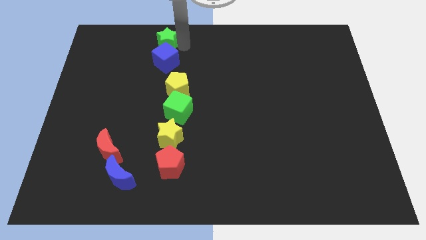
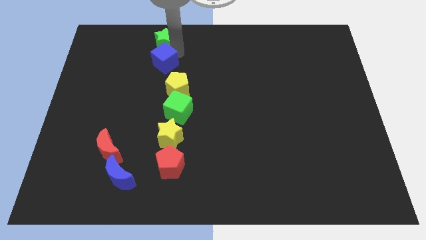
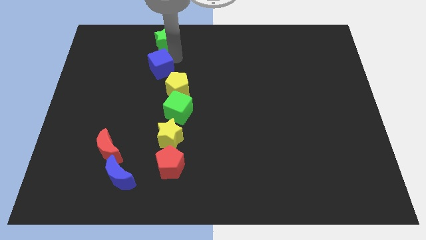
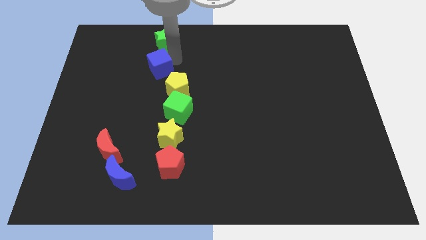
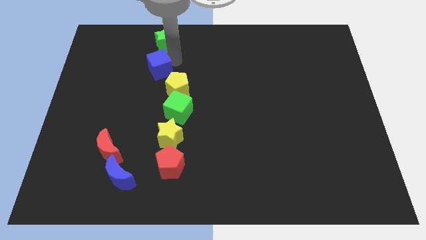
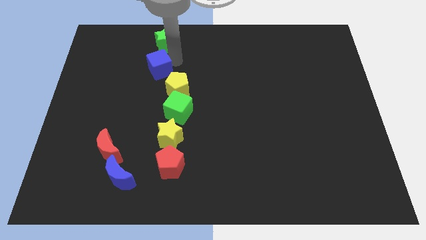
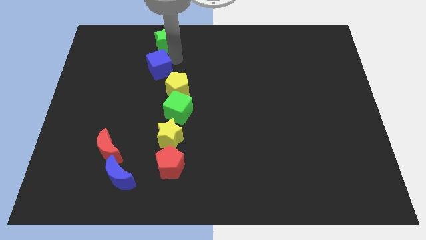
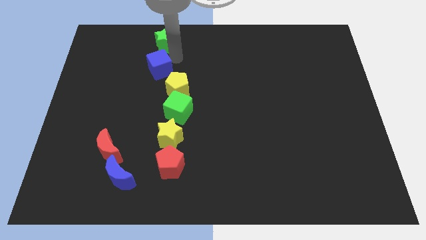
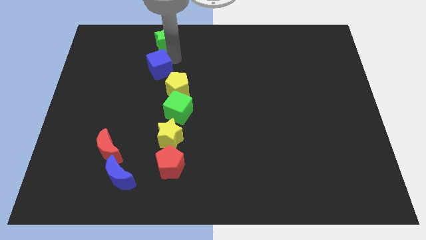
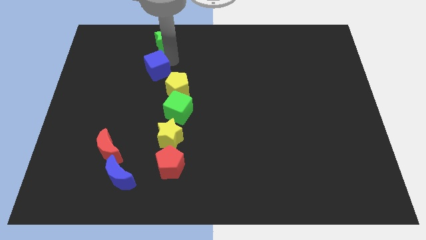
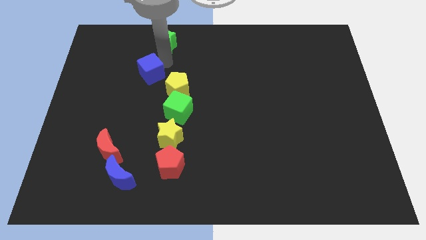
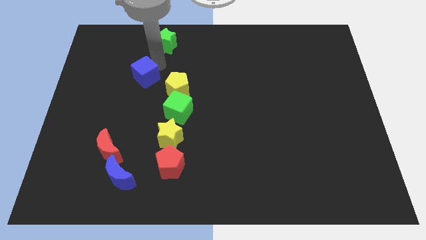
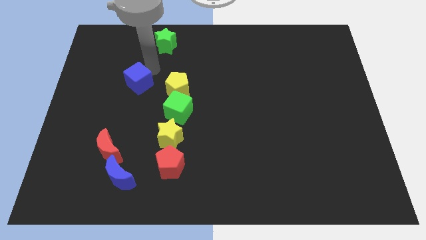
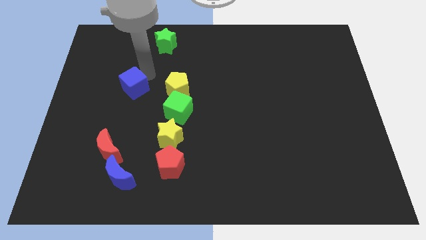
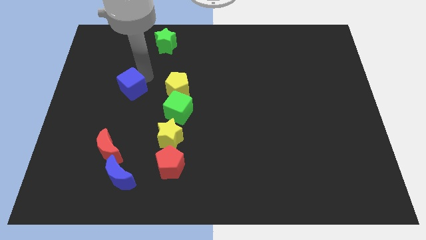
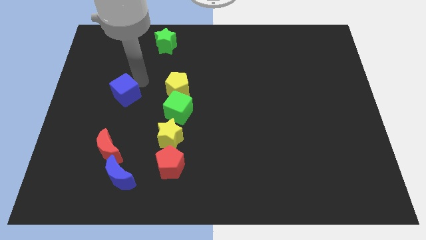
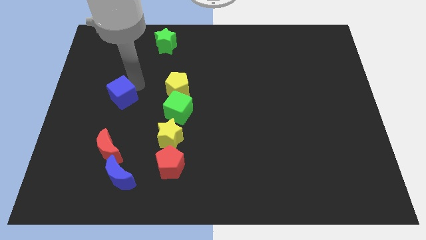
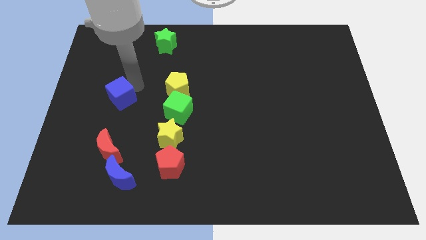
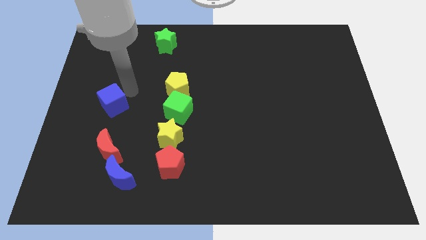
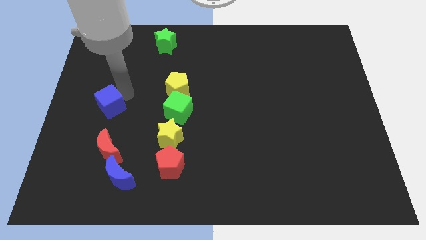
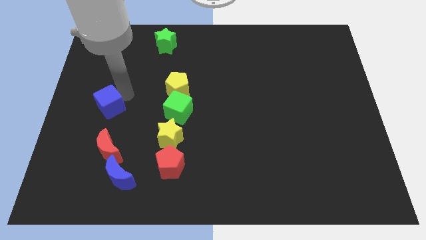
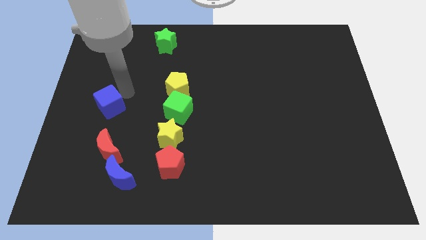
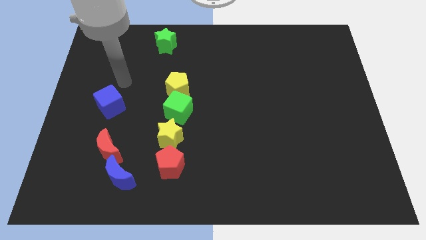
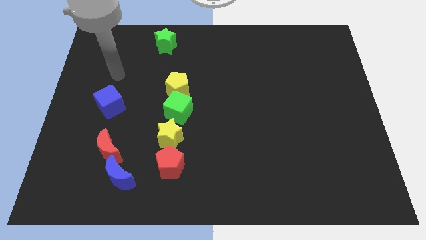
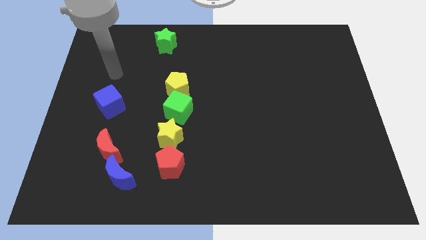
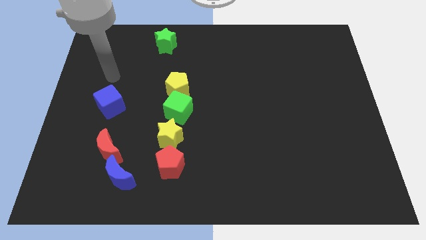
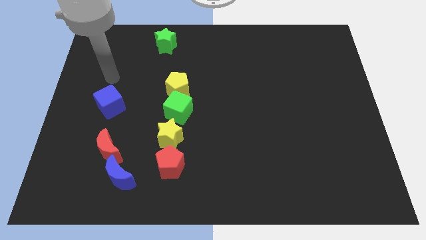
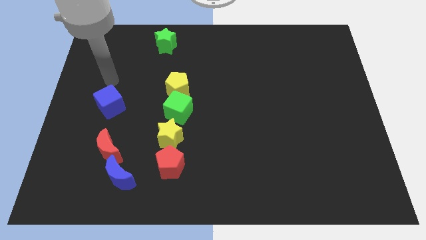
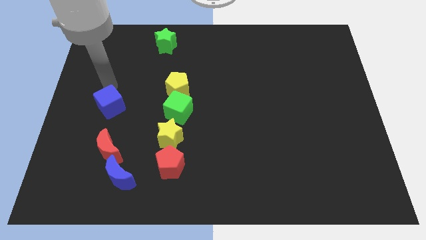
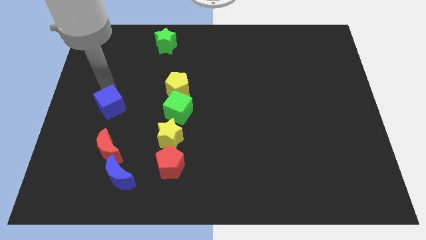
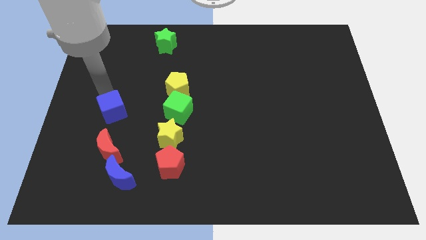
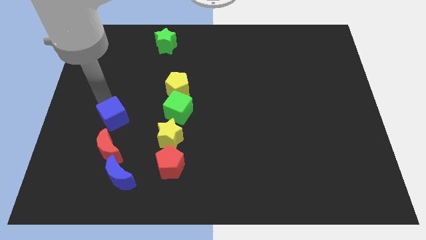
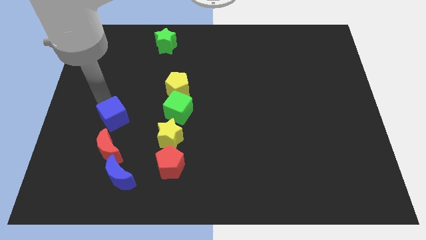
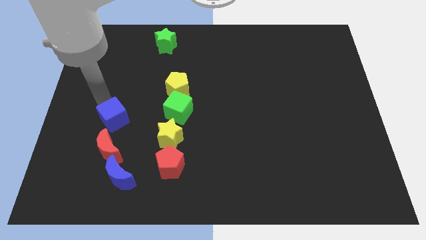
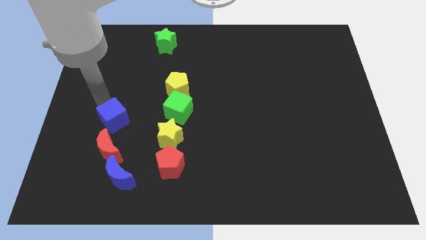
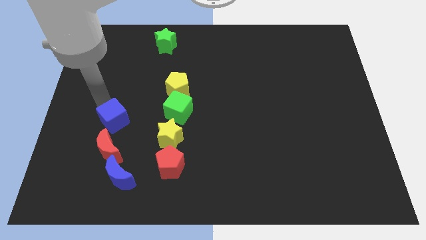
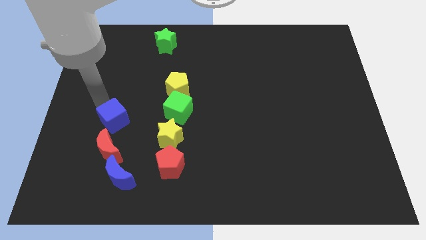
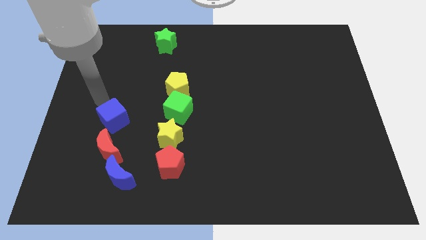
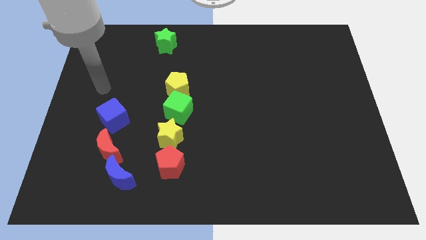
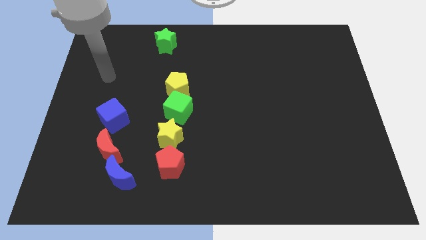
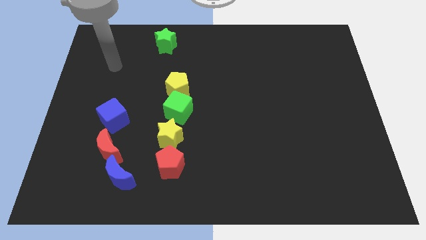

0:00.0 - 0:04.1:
place the blue cube above the red crescent

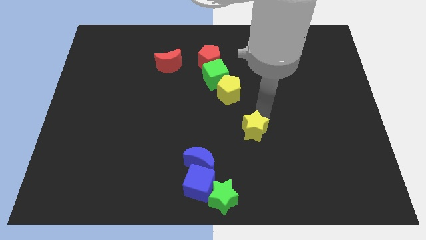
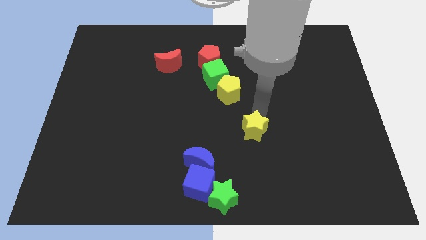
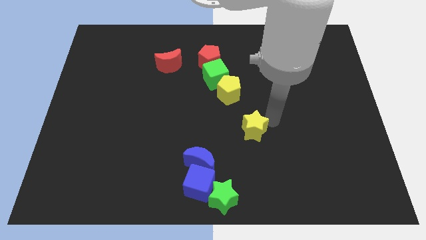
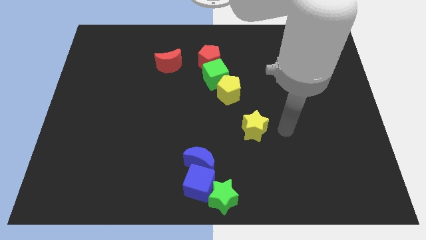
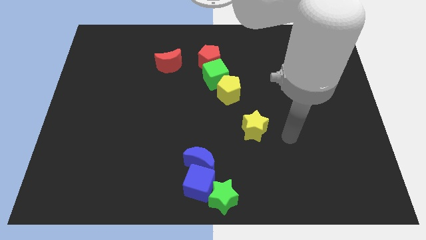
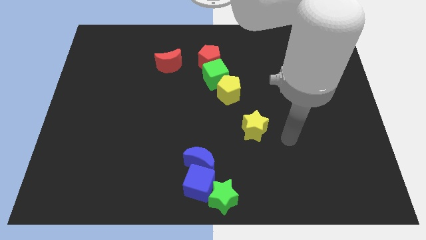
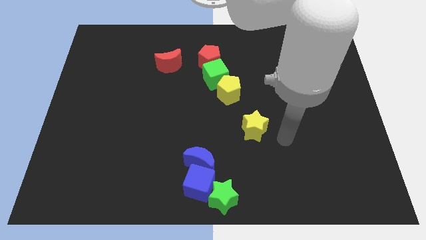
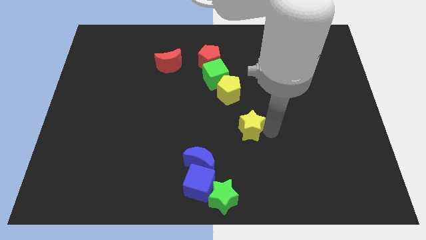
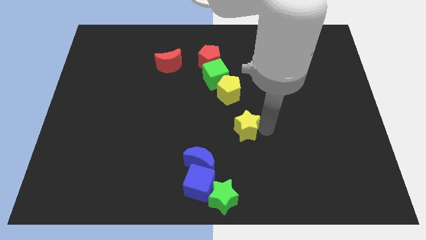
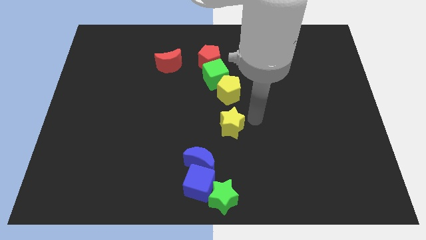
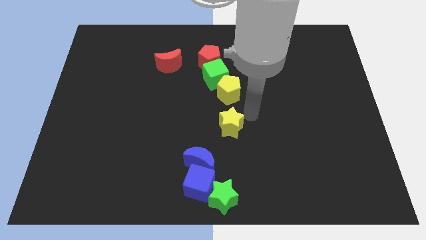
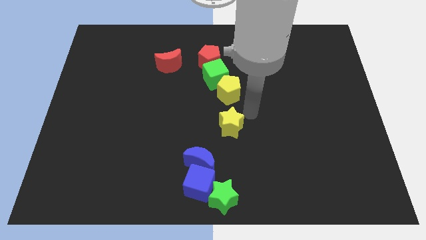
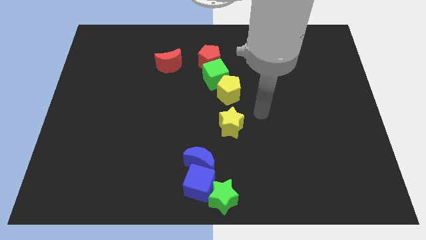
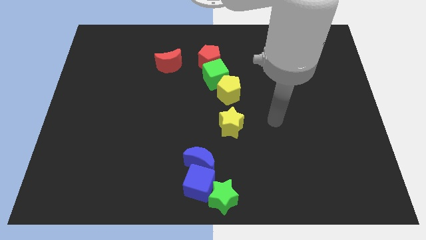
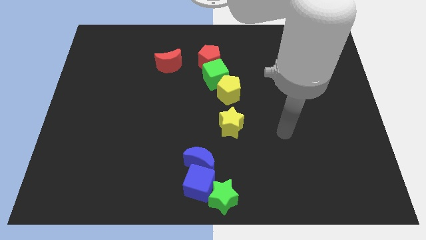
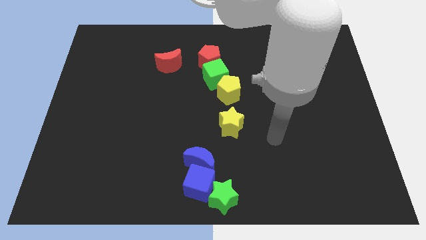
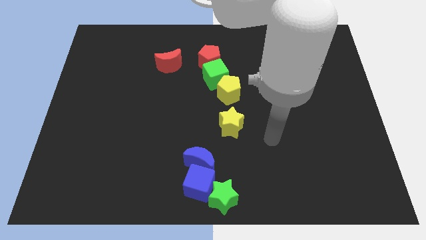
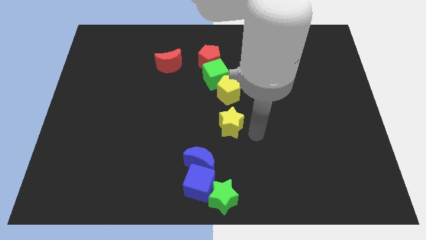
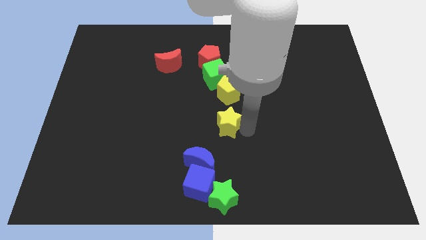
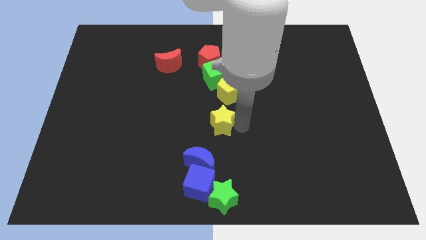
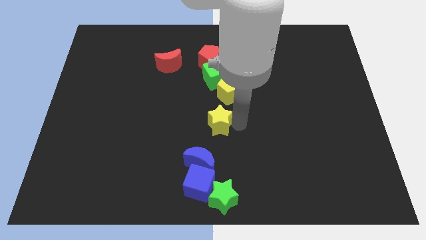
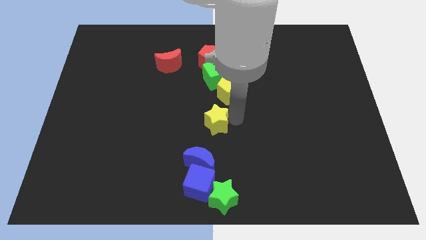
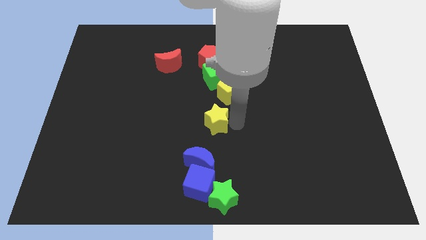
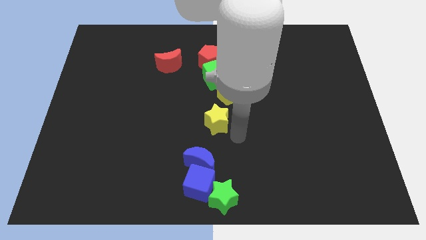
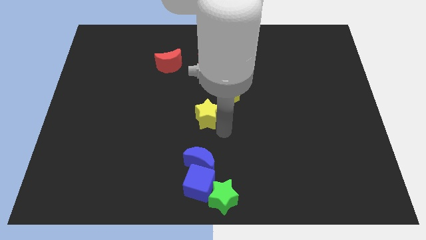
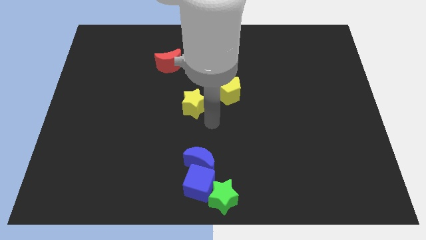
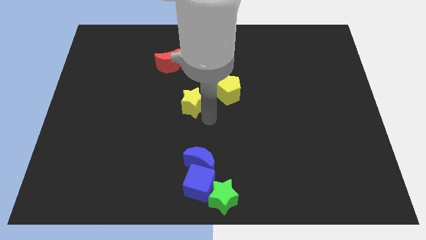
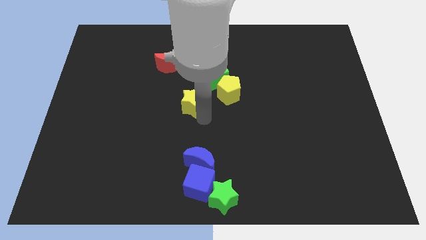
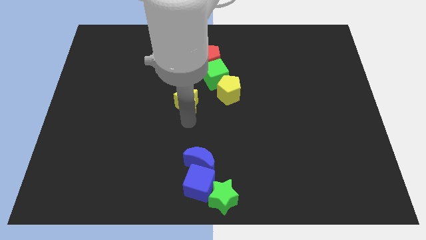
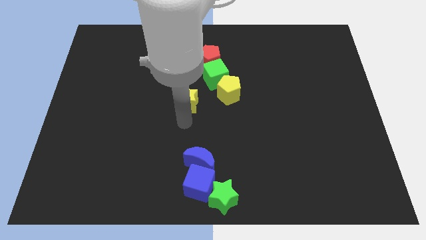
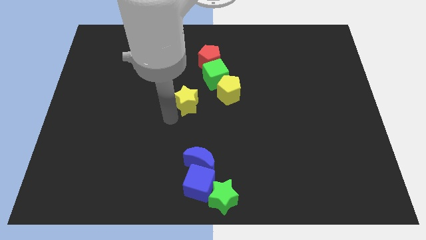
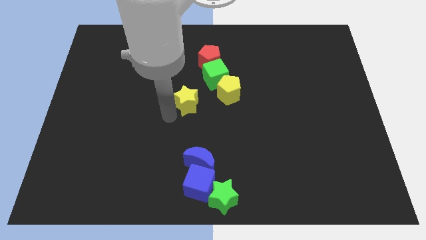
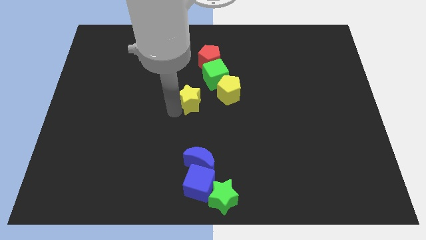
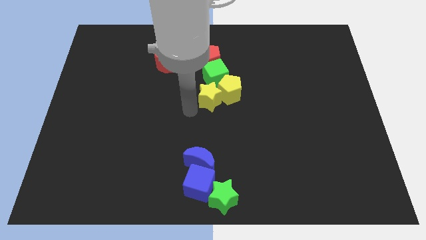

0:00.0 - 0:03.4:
place the yellow star at the center of the board

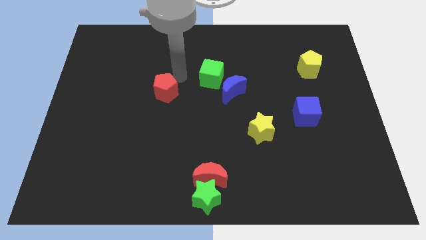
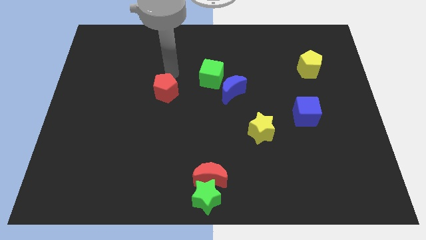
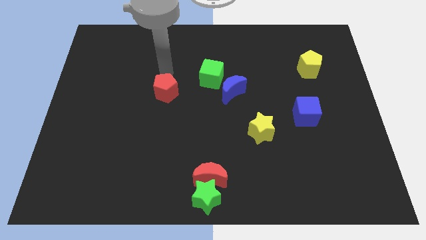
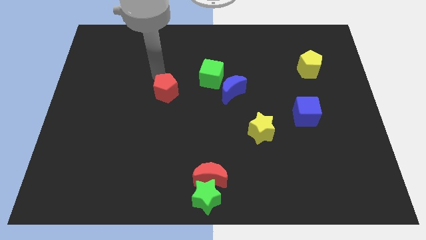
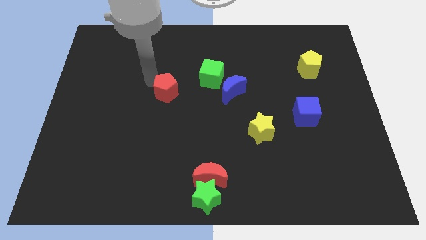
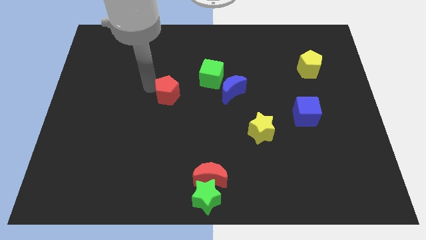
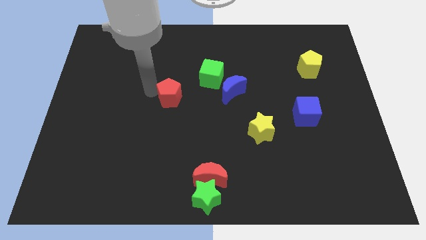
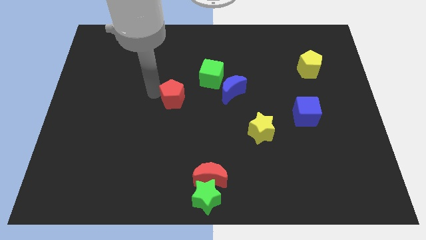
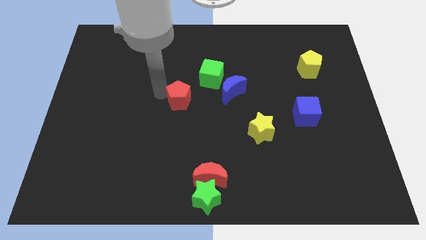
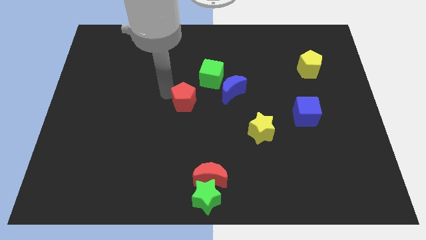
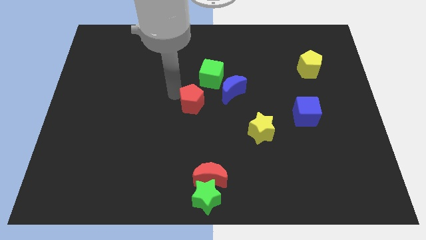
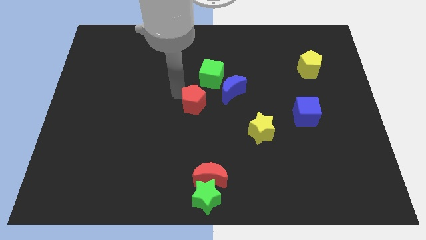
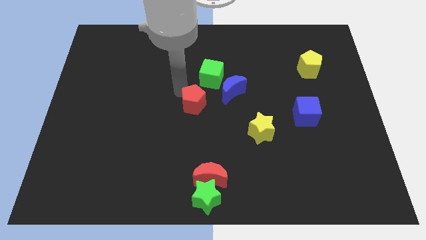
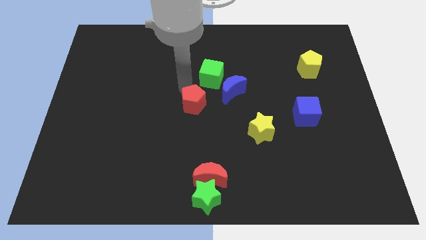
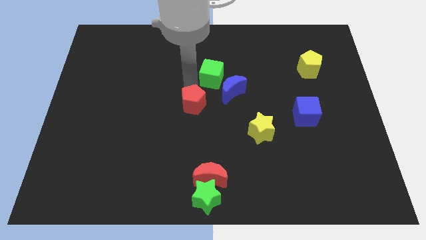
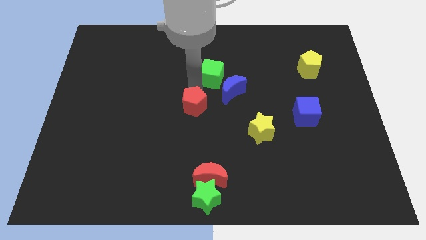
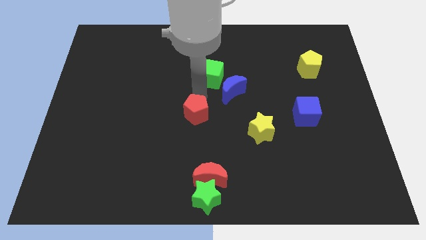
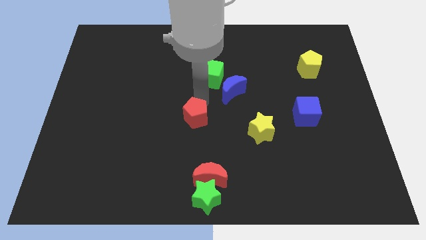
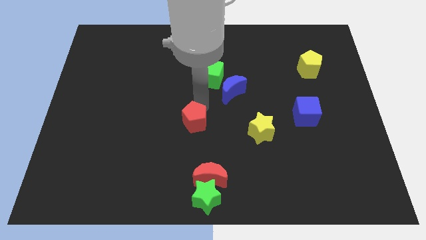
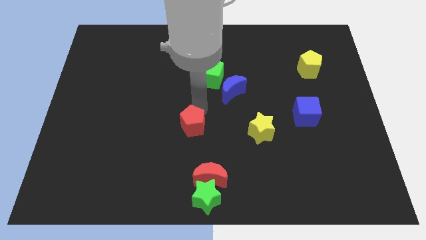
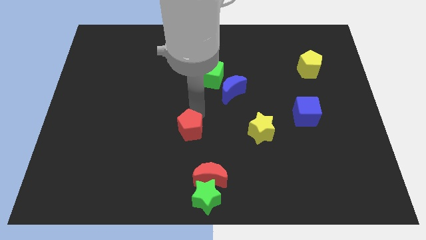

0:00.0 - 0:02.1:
place red pentagon parallel to yellow star
